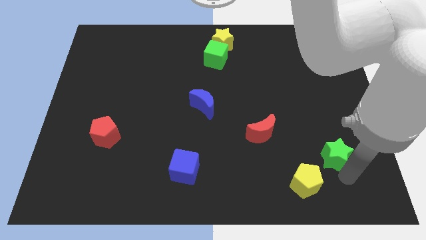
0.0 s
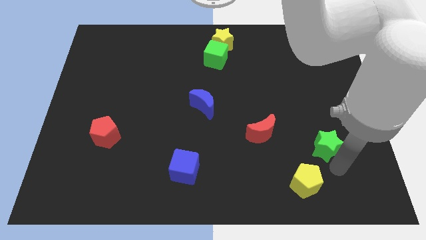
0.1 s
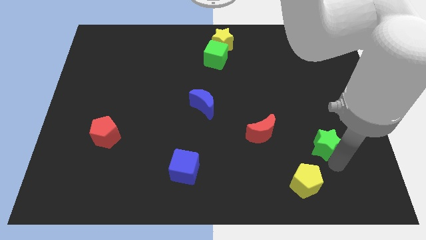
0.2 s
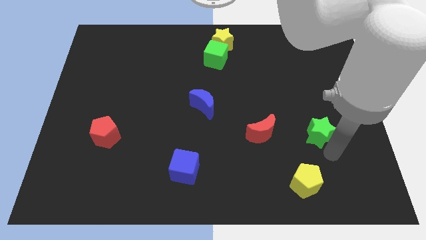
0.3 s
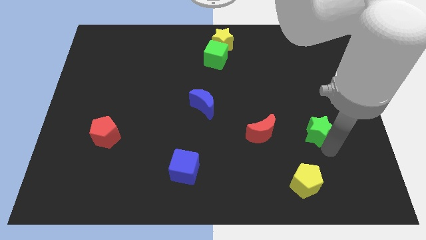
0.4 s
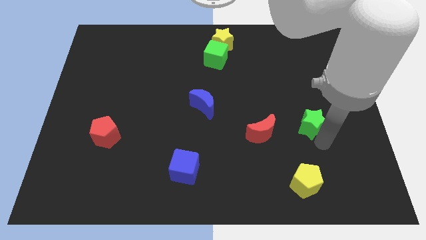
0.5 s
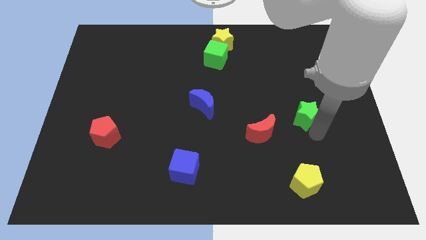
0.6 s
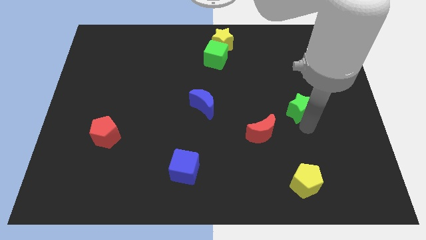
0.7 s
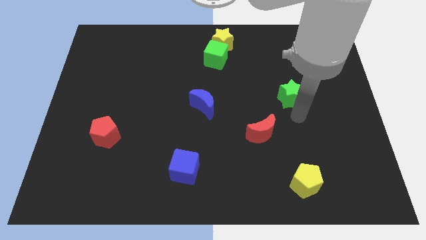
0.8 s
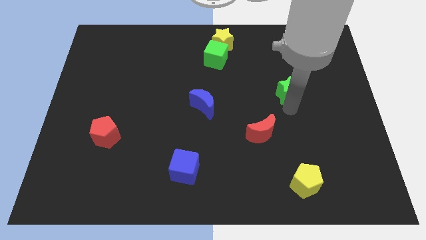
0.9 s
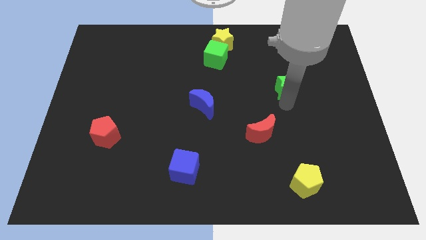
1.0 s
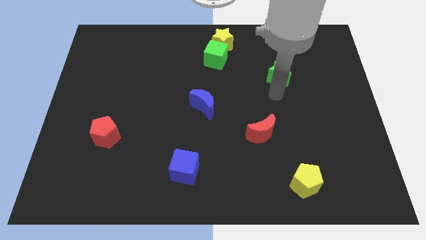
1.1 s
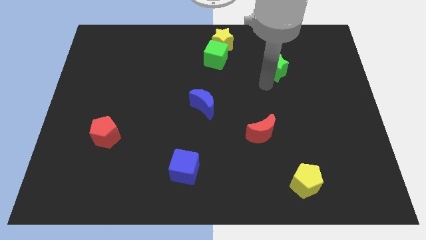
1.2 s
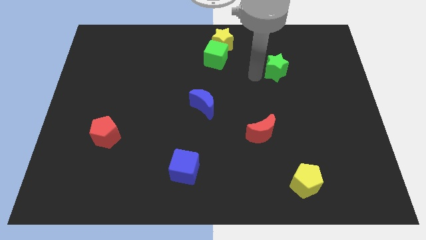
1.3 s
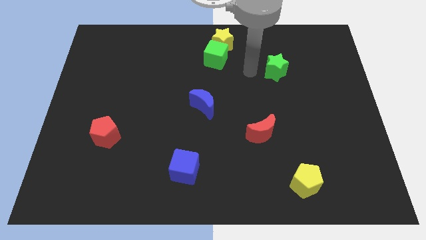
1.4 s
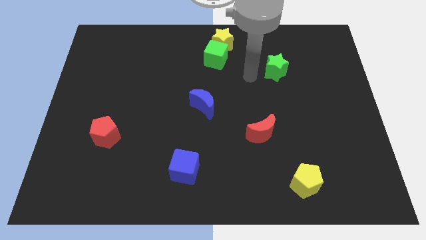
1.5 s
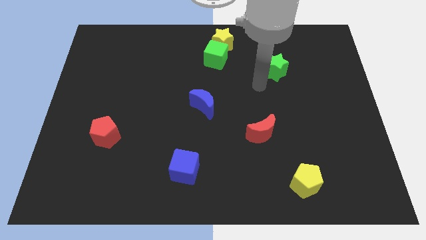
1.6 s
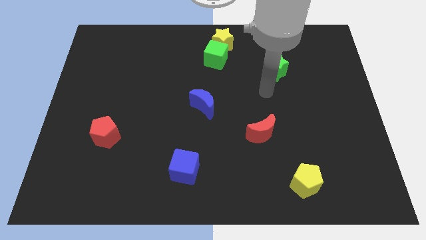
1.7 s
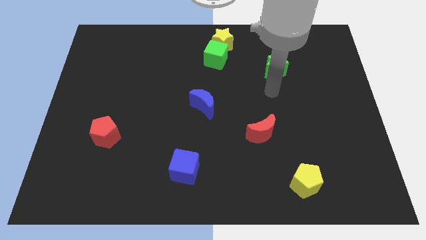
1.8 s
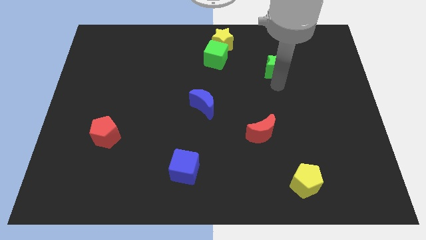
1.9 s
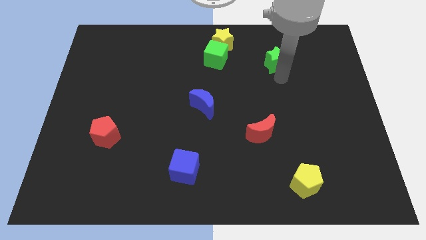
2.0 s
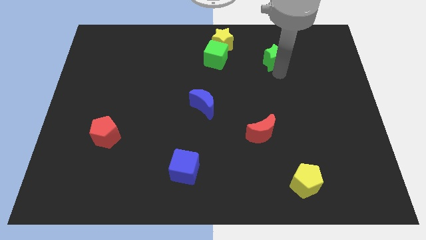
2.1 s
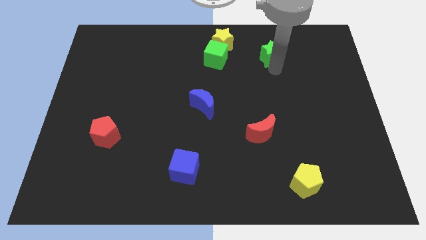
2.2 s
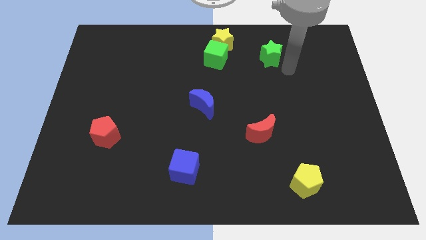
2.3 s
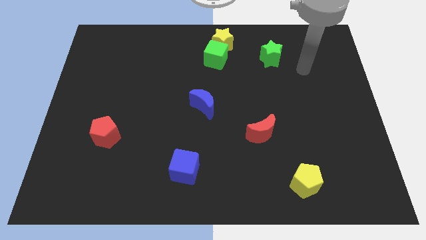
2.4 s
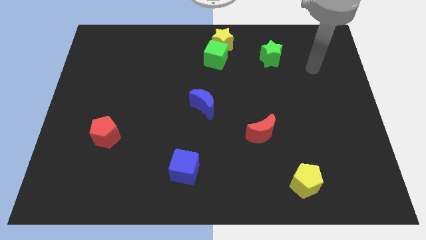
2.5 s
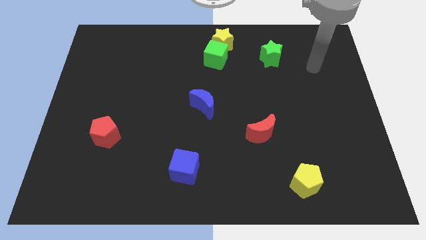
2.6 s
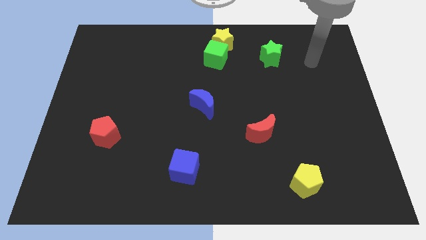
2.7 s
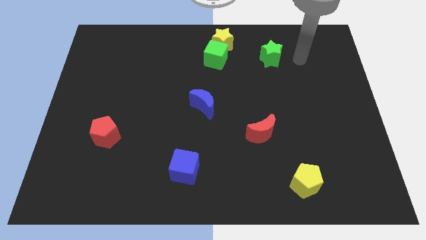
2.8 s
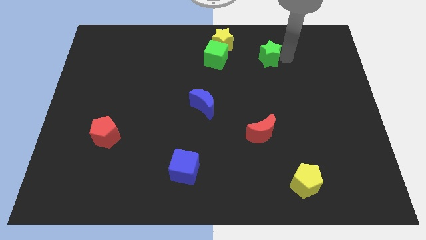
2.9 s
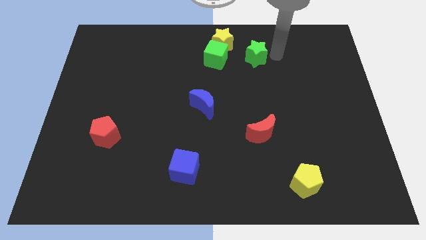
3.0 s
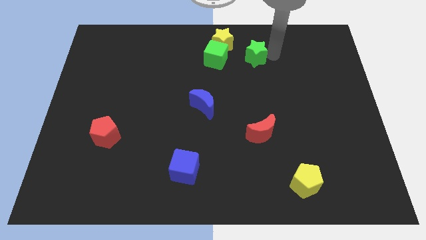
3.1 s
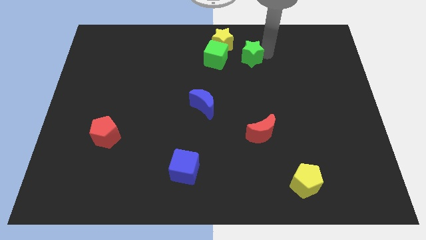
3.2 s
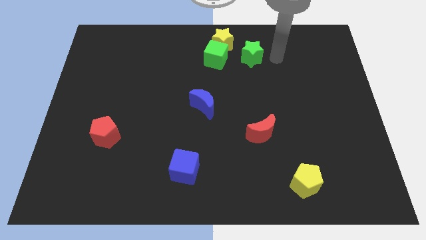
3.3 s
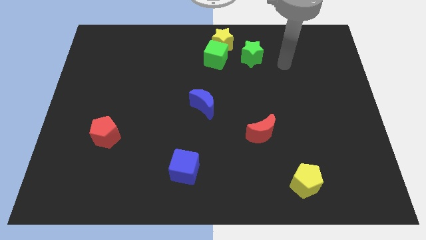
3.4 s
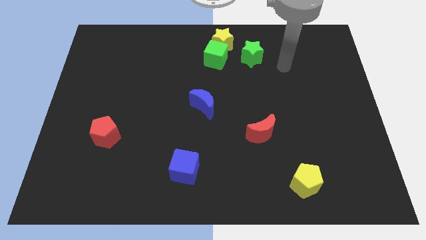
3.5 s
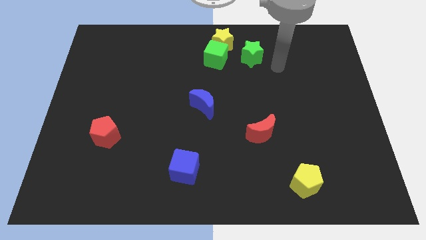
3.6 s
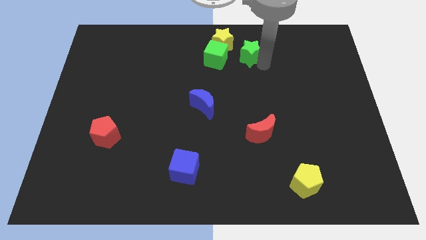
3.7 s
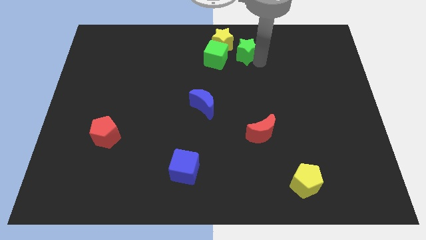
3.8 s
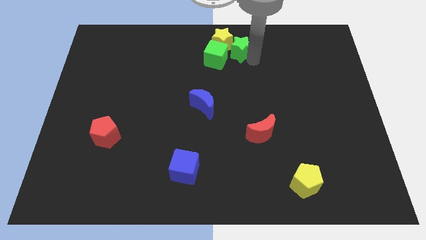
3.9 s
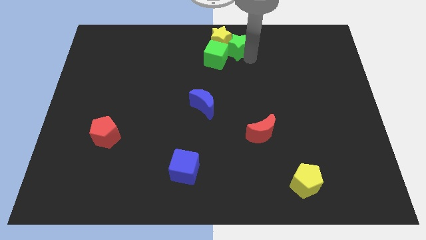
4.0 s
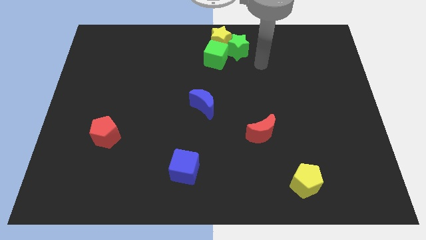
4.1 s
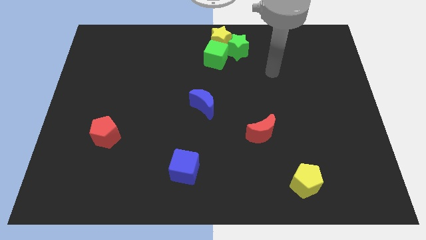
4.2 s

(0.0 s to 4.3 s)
push the green star right to the yellow star

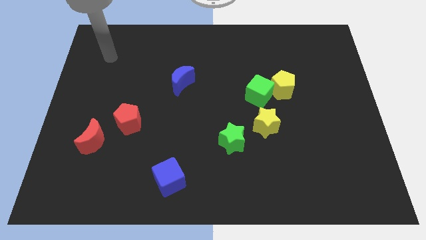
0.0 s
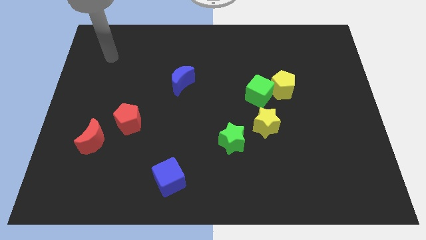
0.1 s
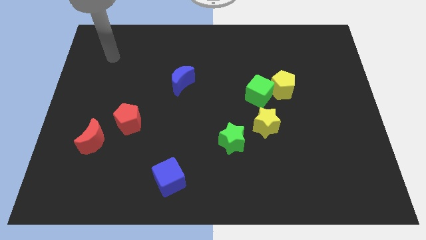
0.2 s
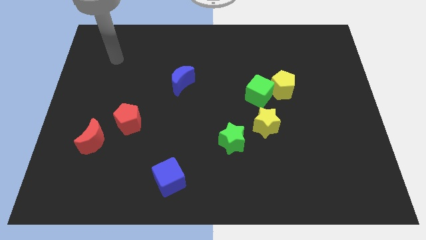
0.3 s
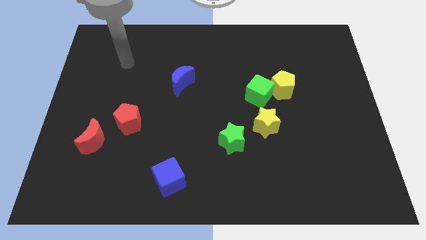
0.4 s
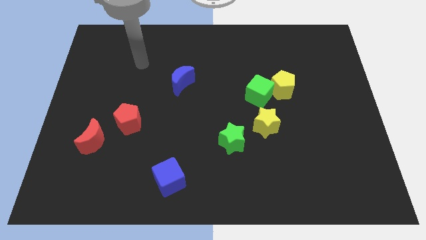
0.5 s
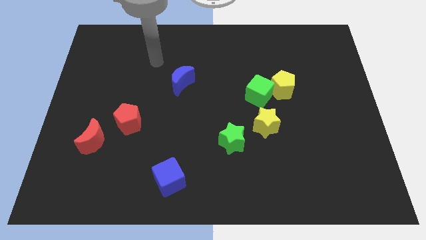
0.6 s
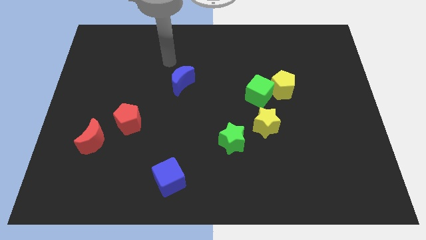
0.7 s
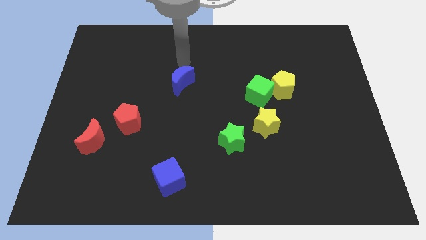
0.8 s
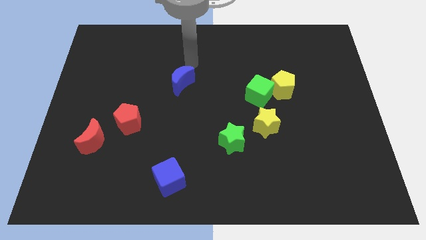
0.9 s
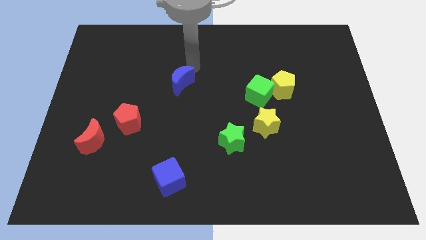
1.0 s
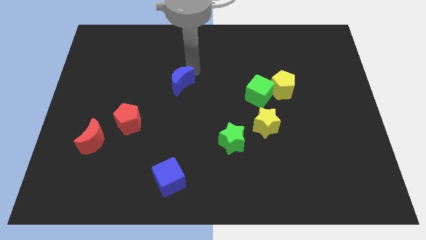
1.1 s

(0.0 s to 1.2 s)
point your arm at the top of blue moon

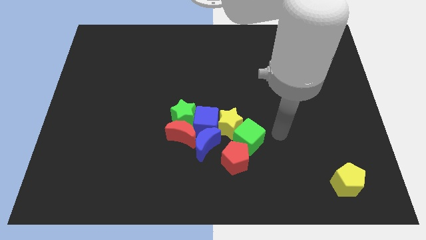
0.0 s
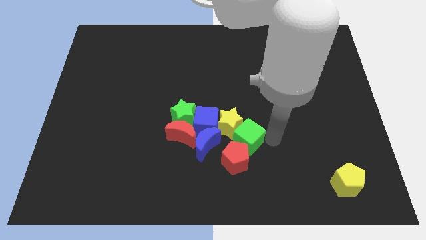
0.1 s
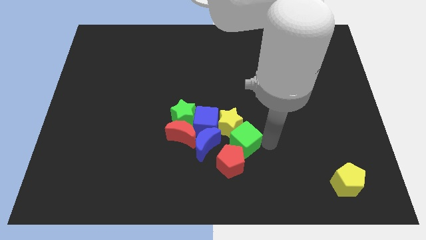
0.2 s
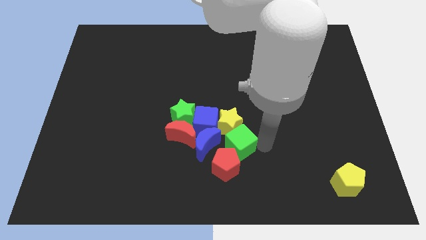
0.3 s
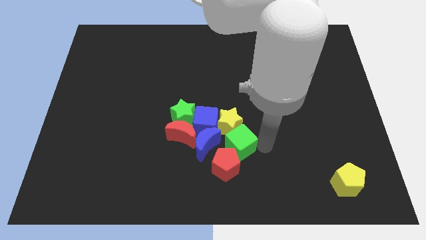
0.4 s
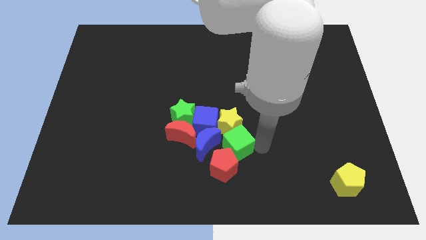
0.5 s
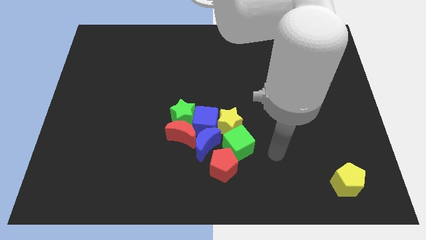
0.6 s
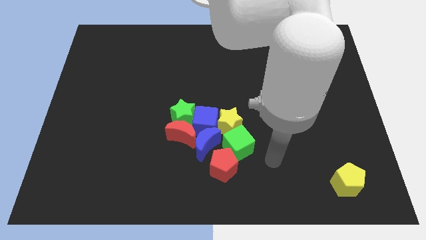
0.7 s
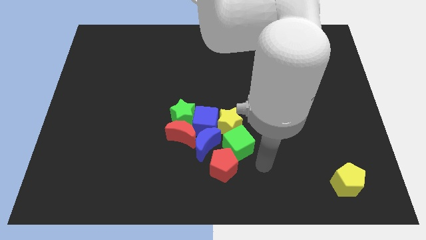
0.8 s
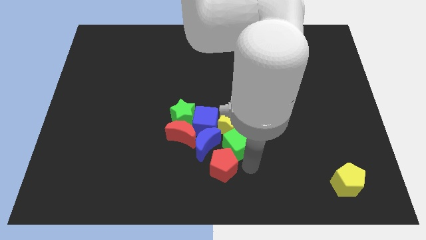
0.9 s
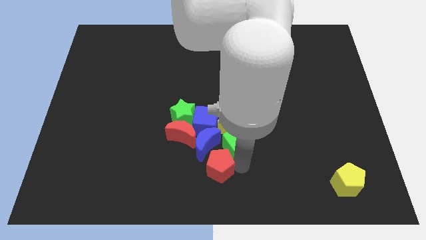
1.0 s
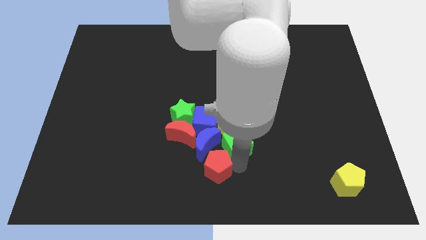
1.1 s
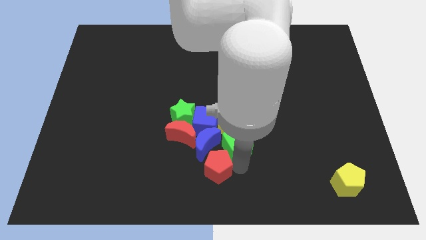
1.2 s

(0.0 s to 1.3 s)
move the green cube along with red pentagon

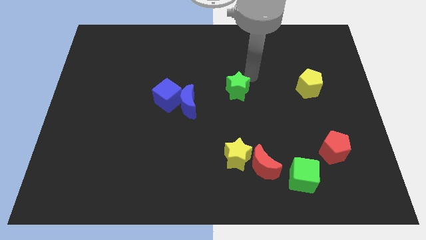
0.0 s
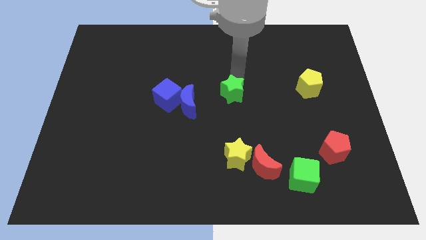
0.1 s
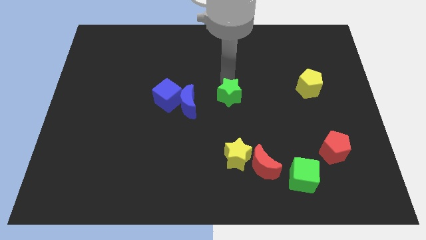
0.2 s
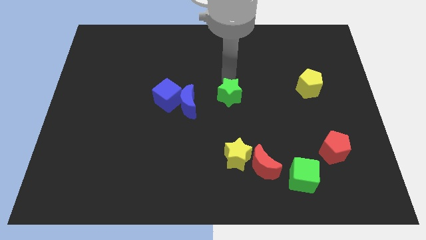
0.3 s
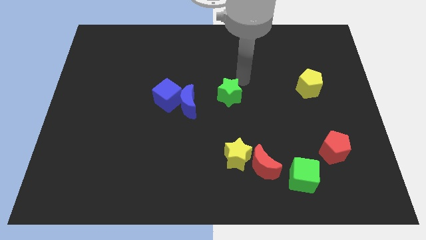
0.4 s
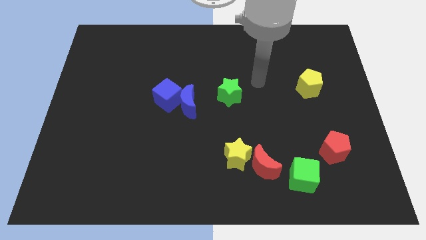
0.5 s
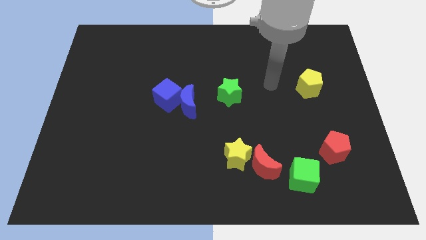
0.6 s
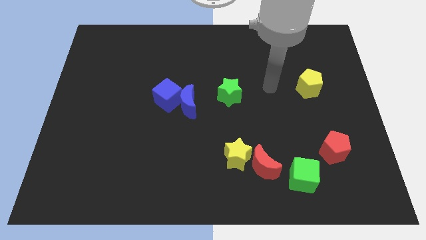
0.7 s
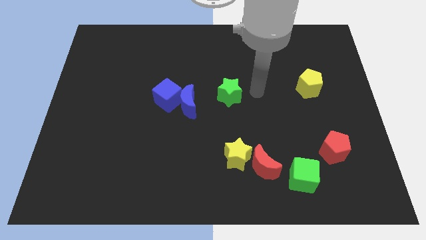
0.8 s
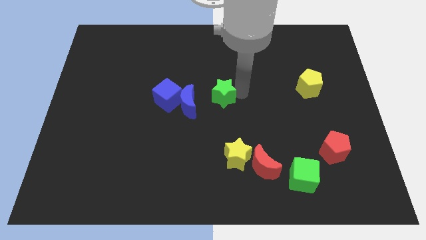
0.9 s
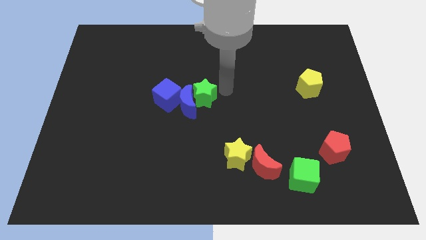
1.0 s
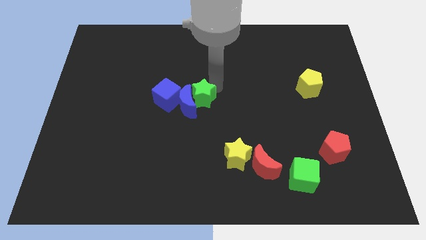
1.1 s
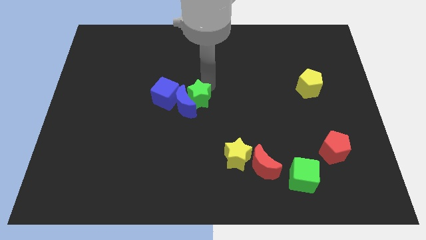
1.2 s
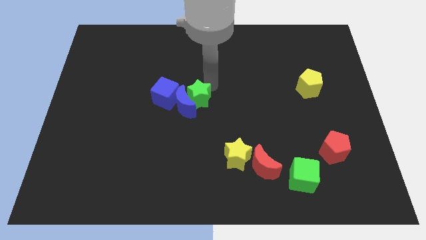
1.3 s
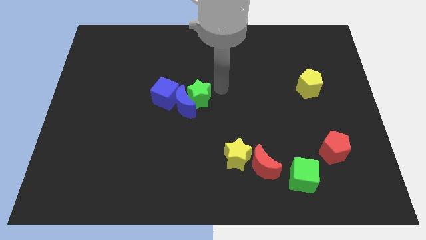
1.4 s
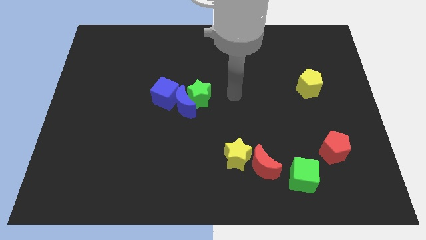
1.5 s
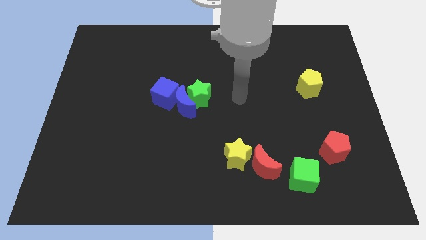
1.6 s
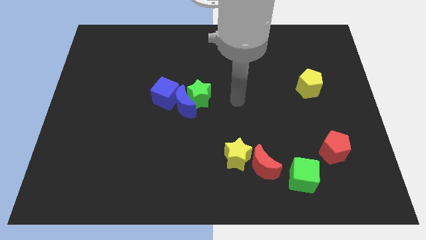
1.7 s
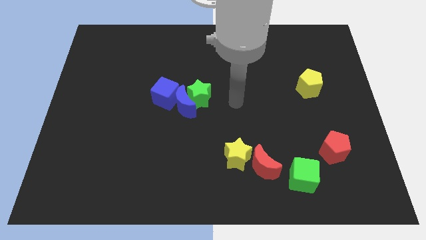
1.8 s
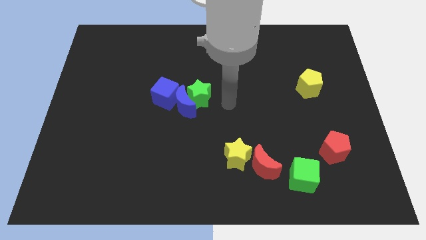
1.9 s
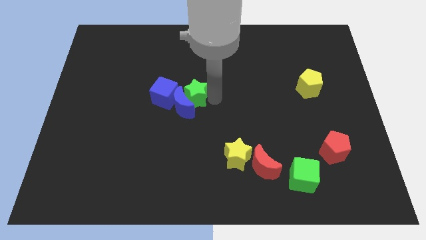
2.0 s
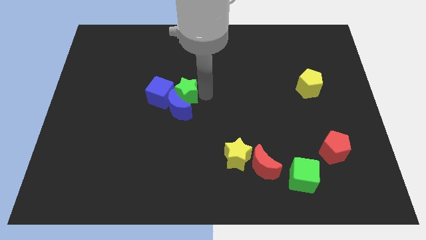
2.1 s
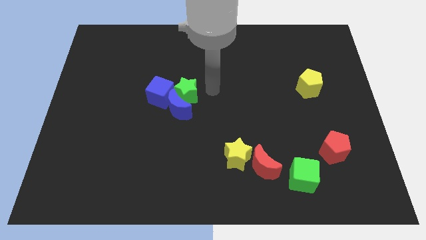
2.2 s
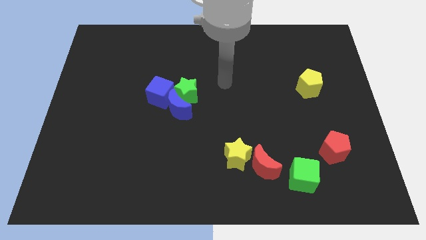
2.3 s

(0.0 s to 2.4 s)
place the green star above the blue moon
